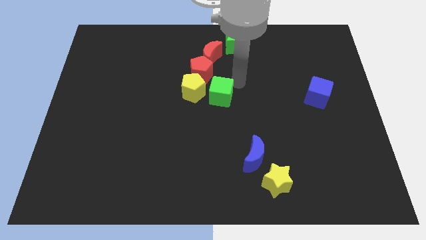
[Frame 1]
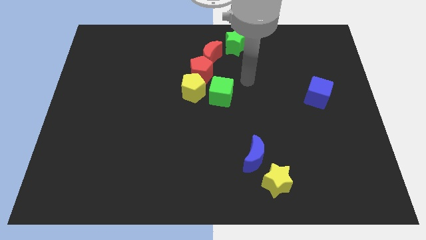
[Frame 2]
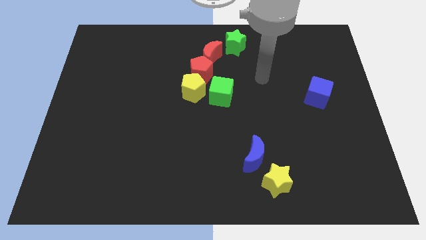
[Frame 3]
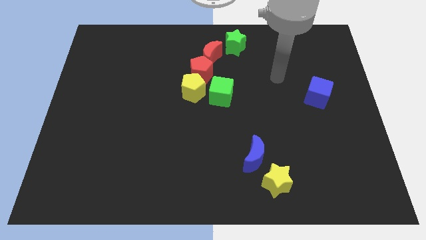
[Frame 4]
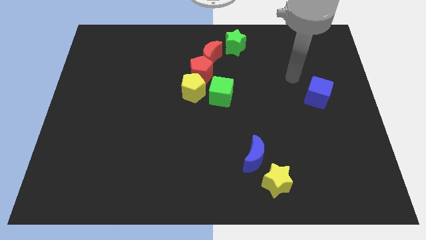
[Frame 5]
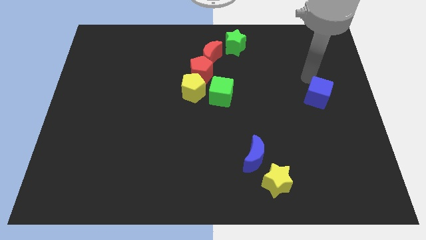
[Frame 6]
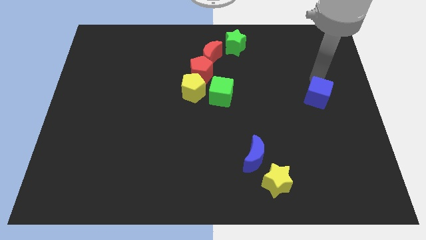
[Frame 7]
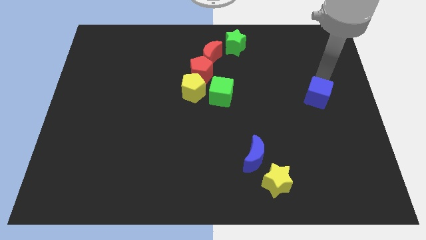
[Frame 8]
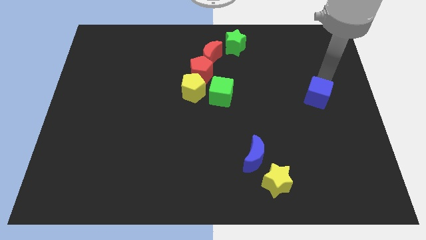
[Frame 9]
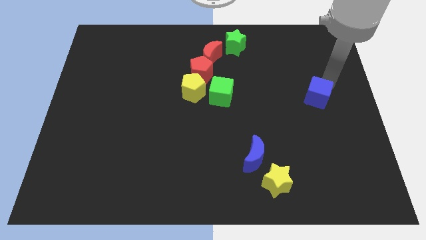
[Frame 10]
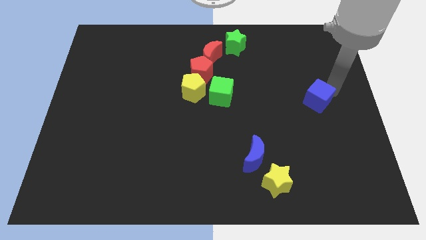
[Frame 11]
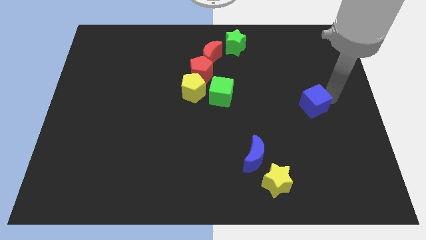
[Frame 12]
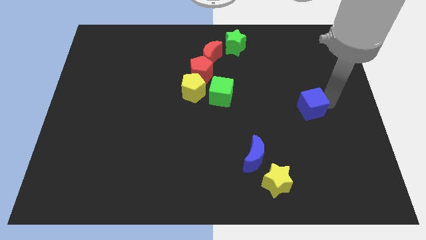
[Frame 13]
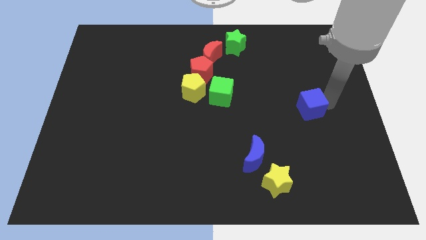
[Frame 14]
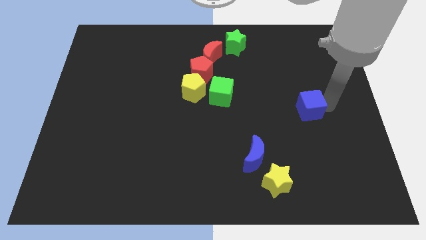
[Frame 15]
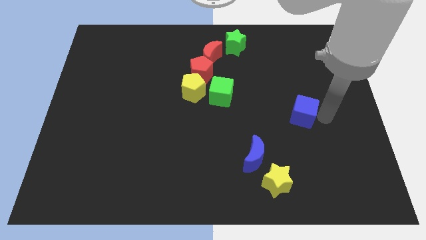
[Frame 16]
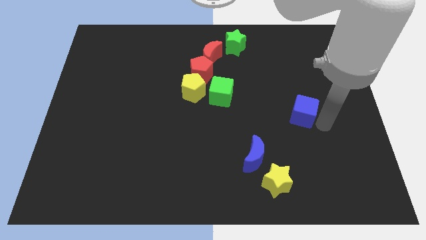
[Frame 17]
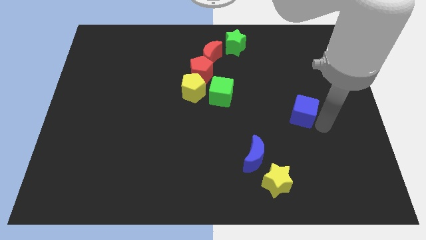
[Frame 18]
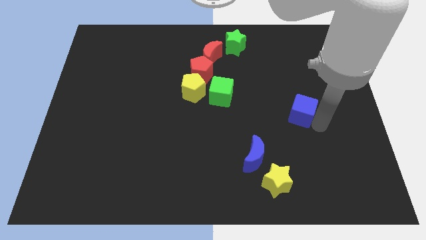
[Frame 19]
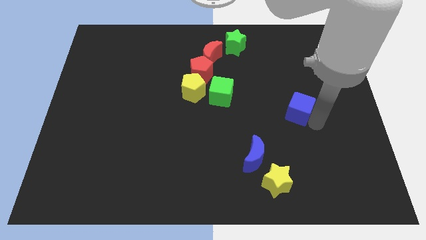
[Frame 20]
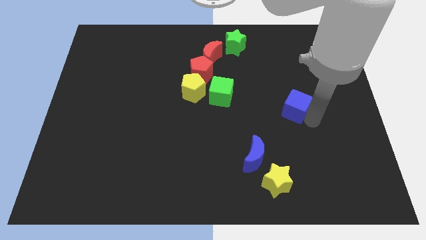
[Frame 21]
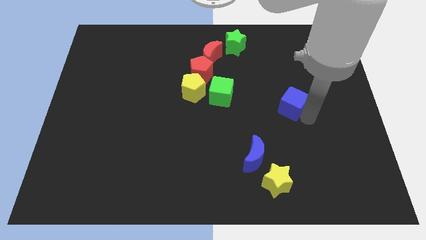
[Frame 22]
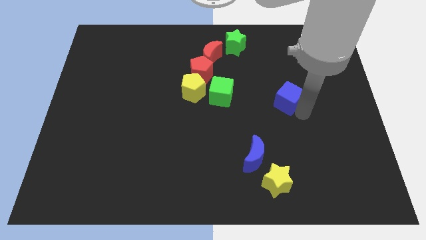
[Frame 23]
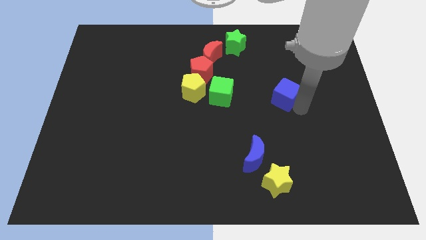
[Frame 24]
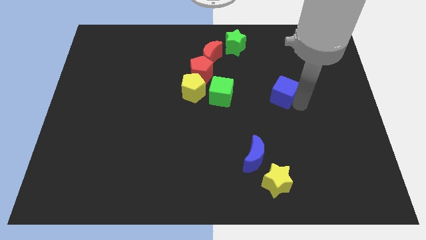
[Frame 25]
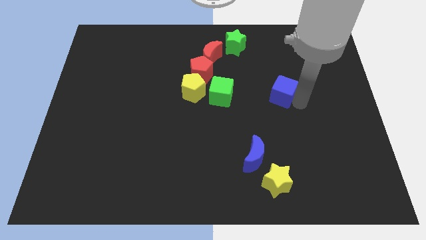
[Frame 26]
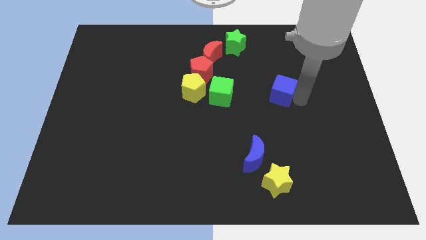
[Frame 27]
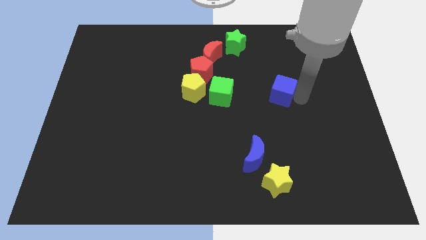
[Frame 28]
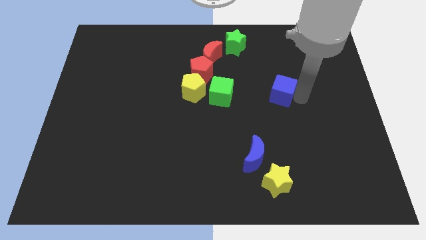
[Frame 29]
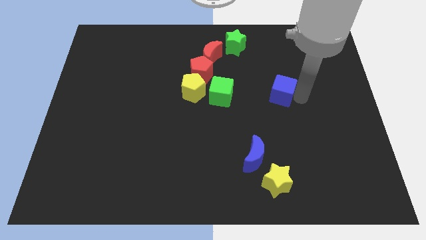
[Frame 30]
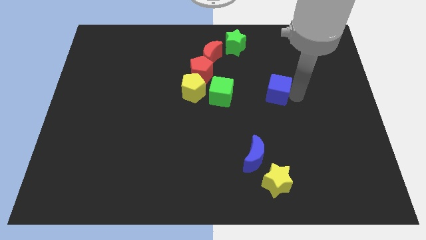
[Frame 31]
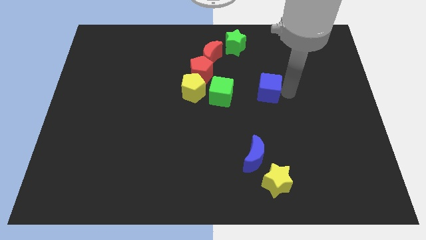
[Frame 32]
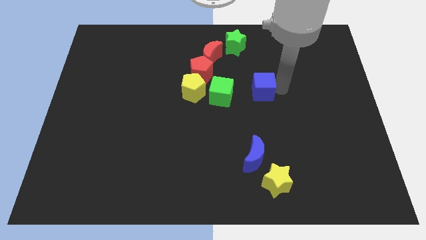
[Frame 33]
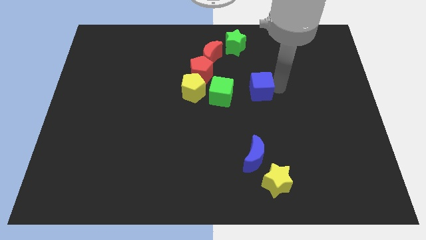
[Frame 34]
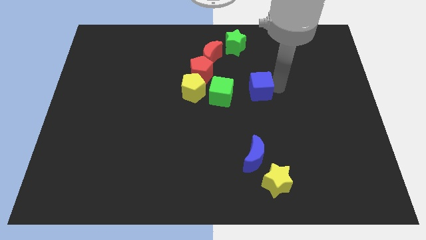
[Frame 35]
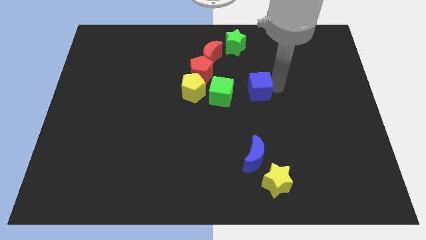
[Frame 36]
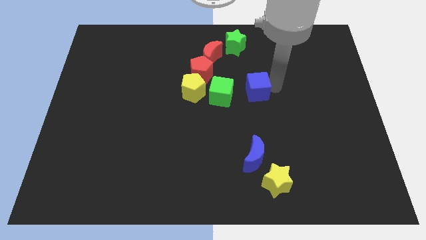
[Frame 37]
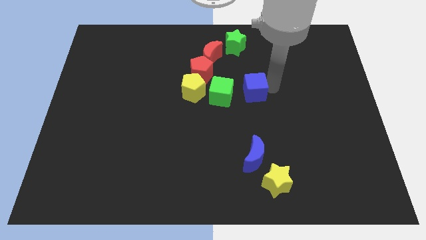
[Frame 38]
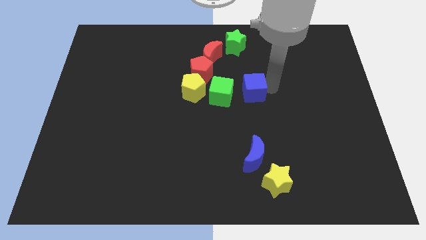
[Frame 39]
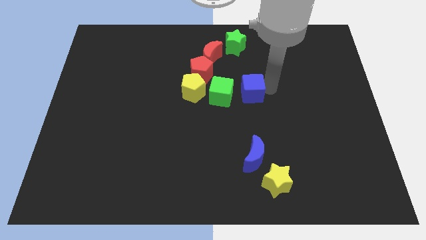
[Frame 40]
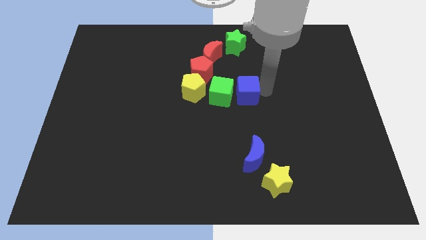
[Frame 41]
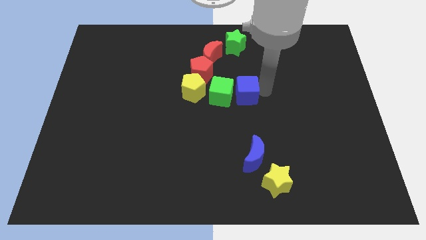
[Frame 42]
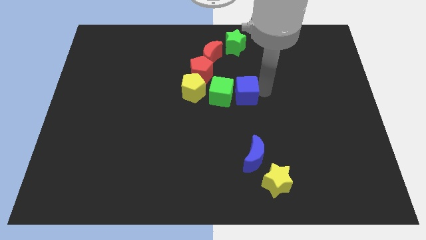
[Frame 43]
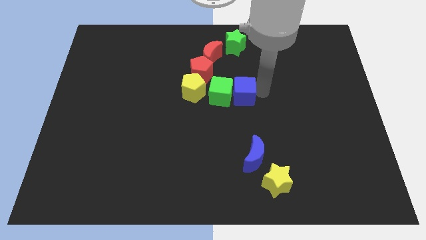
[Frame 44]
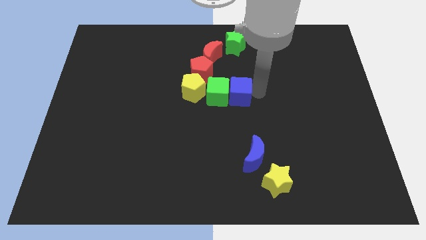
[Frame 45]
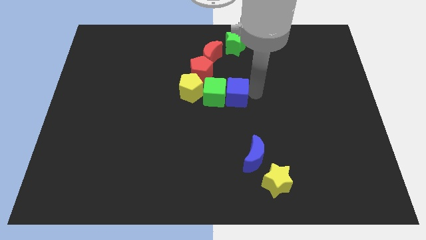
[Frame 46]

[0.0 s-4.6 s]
push the blue cube into the green cube

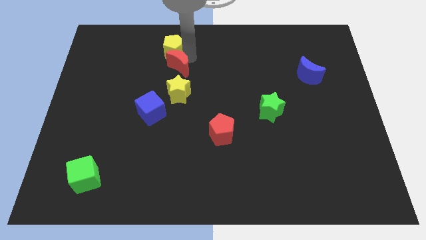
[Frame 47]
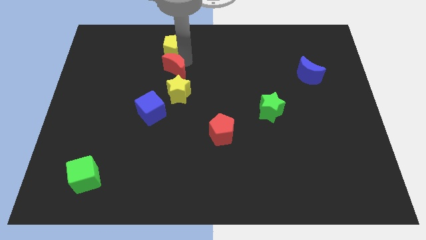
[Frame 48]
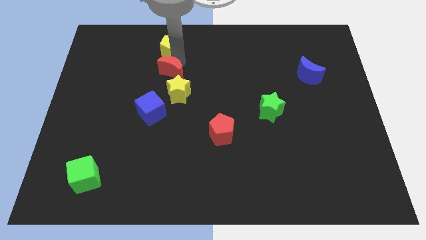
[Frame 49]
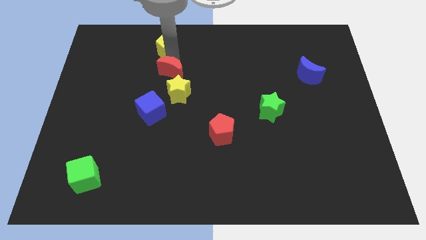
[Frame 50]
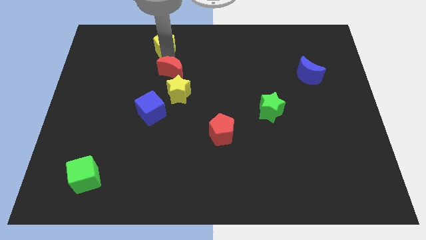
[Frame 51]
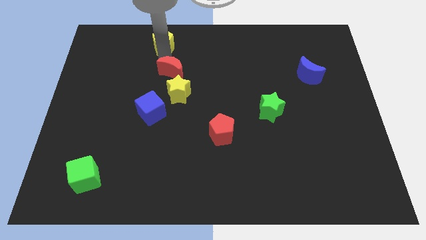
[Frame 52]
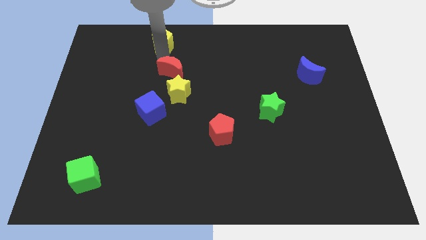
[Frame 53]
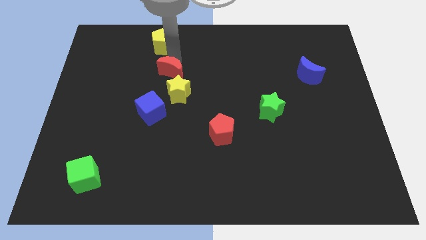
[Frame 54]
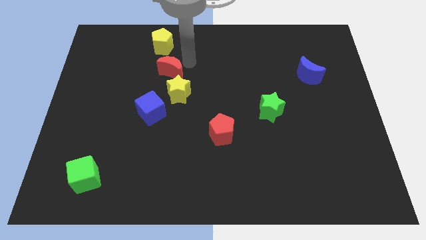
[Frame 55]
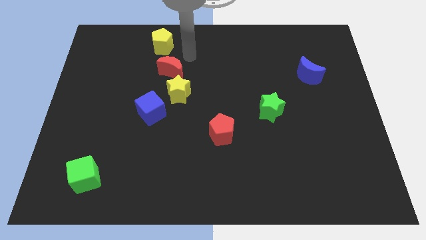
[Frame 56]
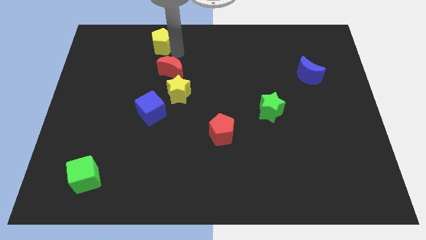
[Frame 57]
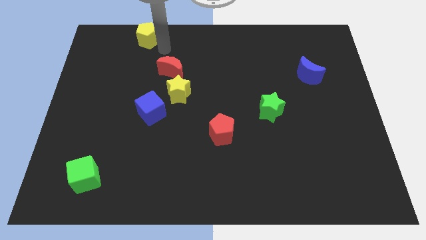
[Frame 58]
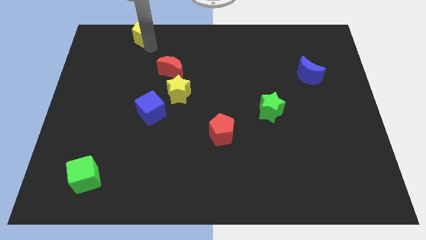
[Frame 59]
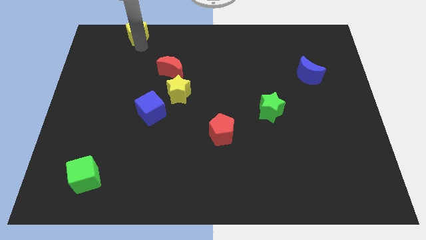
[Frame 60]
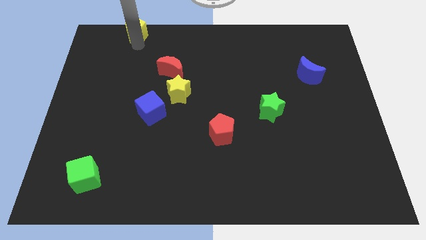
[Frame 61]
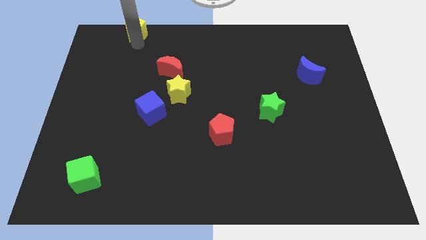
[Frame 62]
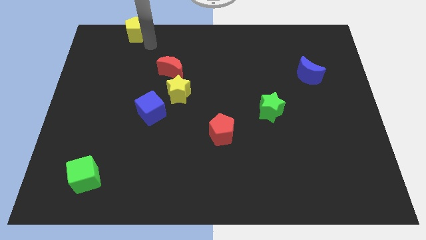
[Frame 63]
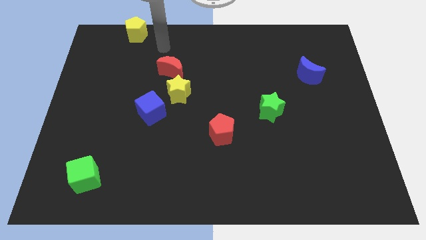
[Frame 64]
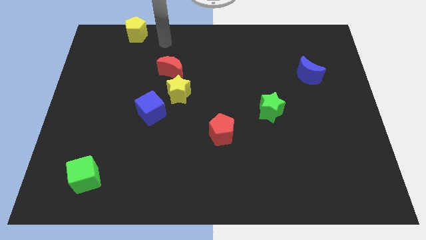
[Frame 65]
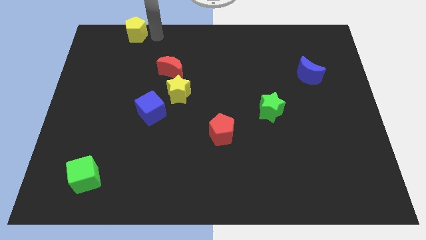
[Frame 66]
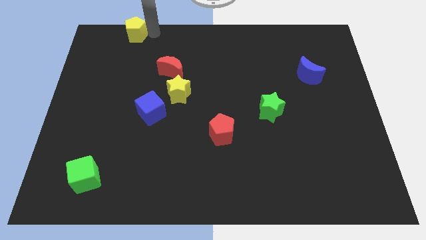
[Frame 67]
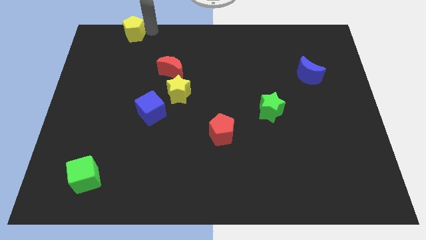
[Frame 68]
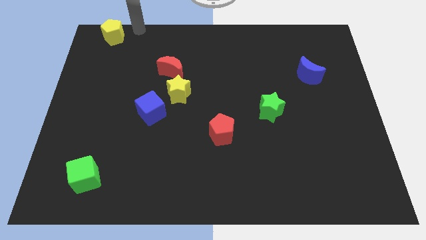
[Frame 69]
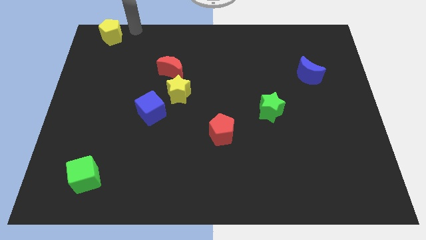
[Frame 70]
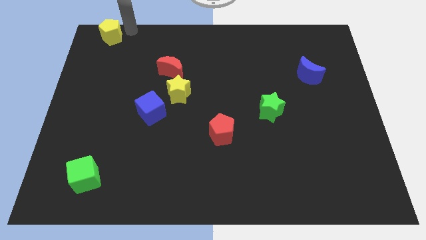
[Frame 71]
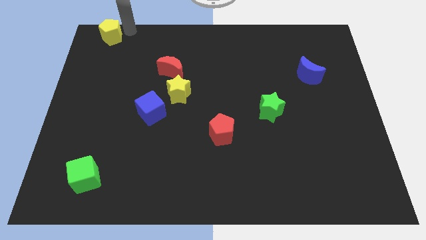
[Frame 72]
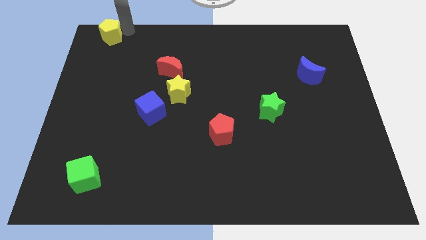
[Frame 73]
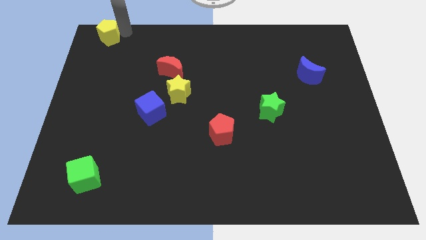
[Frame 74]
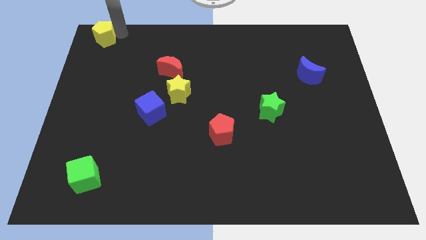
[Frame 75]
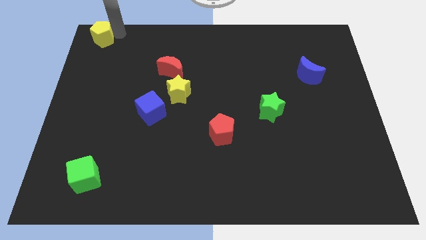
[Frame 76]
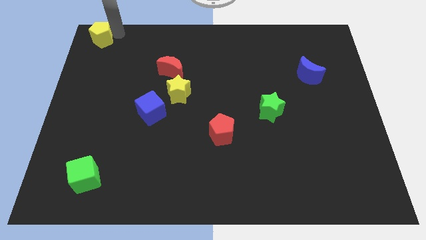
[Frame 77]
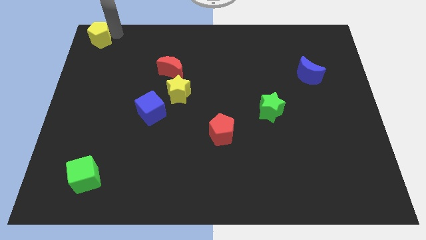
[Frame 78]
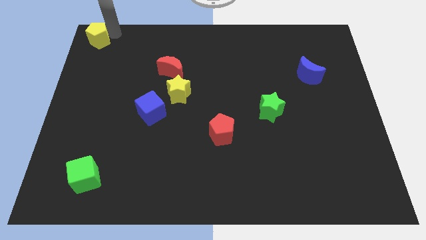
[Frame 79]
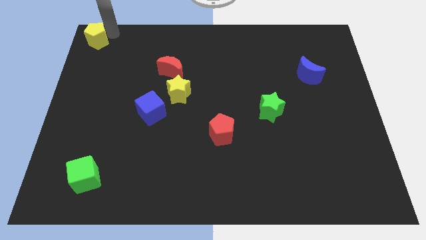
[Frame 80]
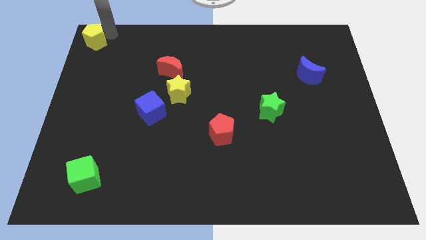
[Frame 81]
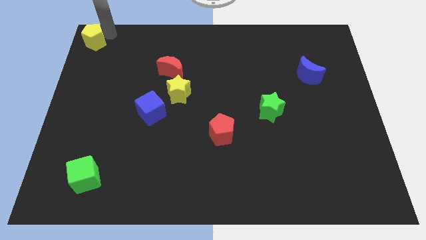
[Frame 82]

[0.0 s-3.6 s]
move the yellow pentagon to the top left of the board

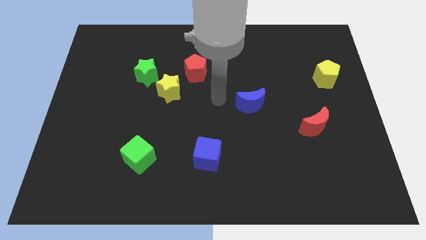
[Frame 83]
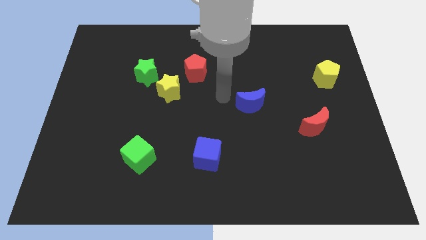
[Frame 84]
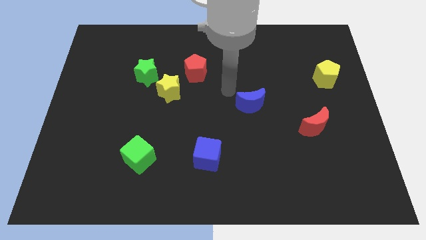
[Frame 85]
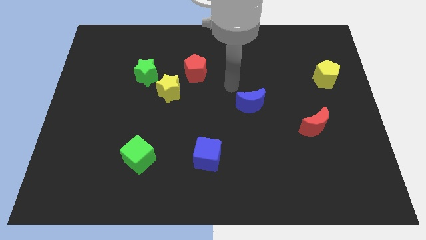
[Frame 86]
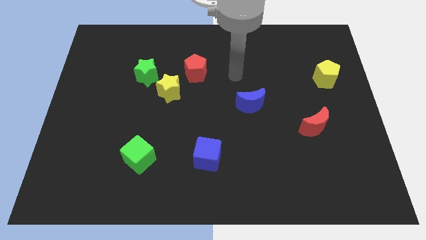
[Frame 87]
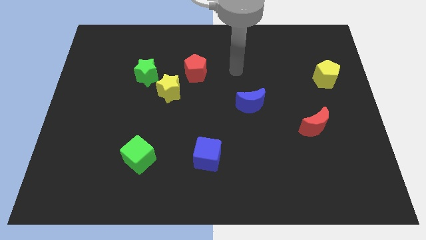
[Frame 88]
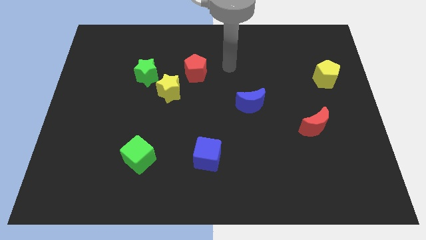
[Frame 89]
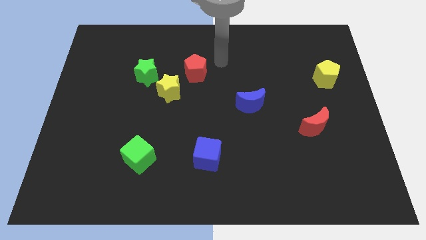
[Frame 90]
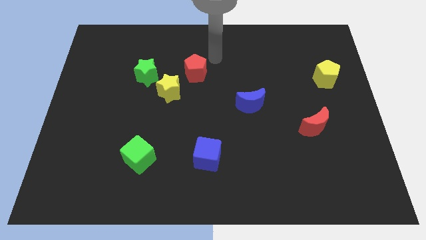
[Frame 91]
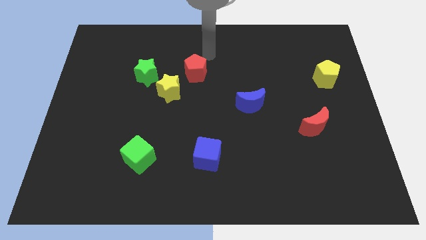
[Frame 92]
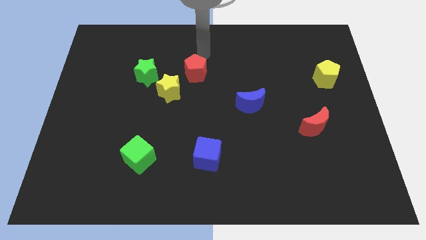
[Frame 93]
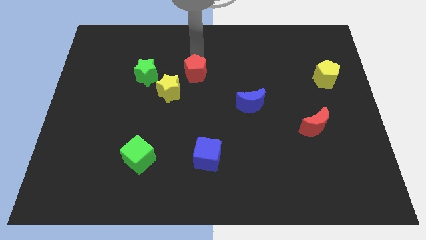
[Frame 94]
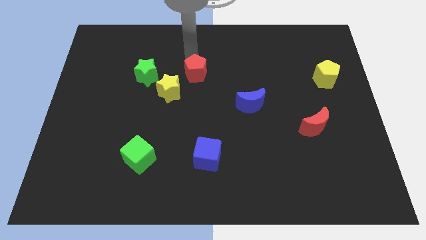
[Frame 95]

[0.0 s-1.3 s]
place the arm on the top of the red pentagon
